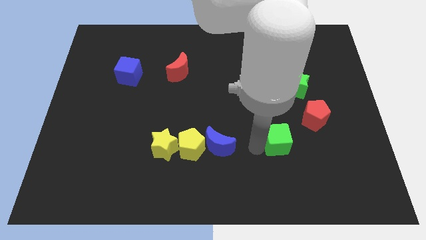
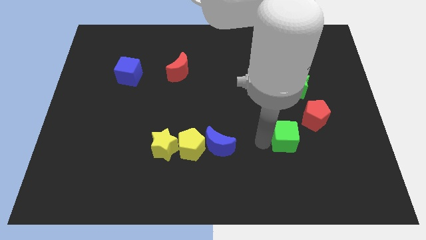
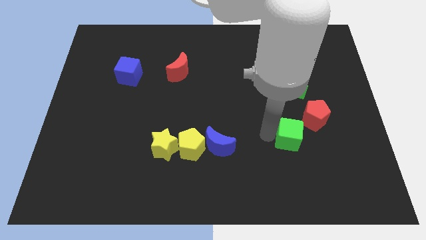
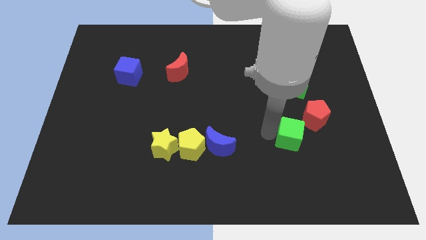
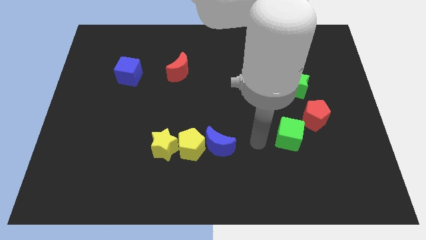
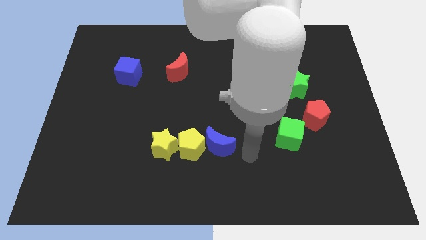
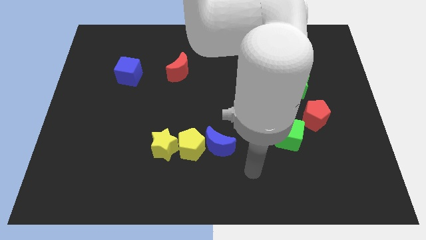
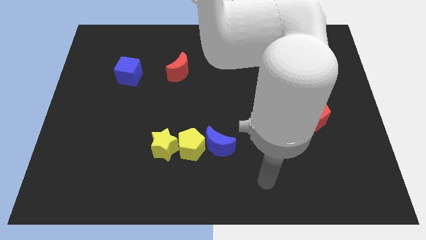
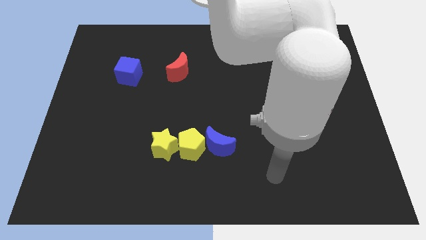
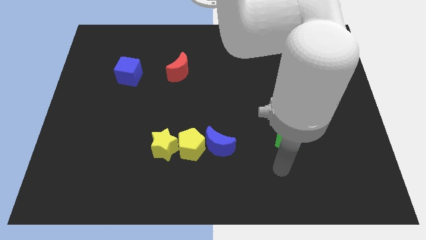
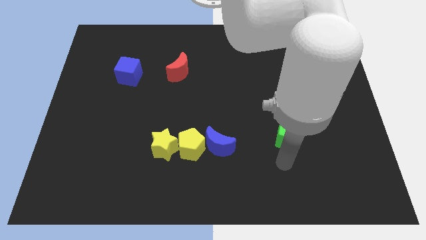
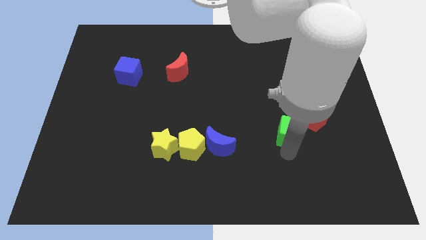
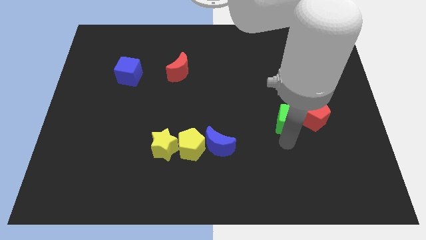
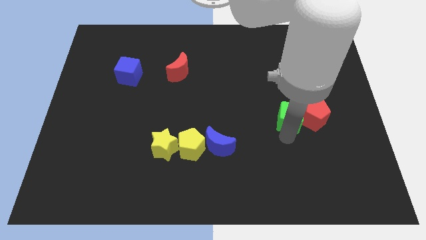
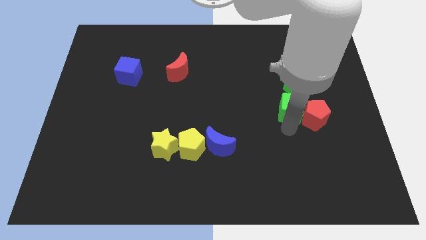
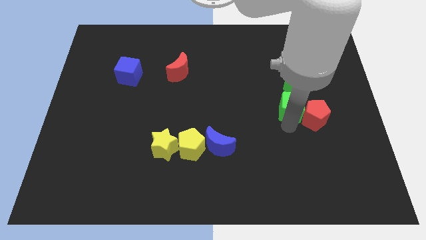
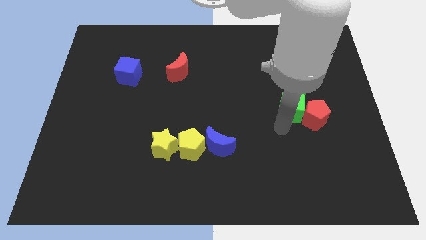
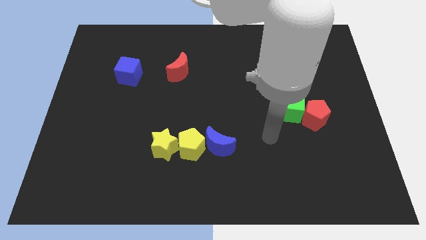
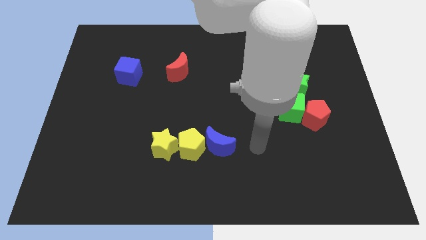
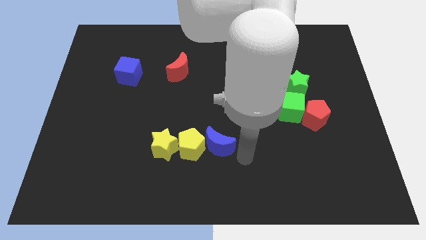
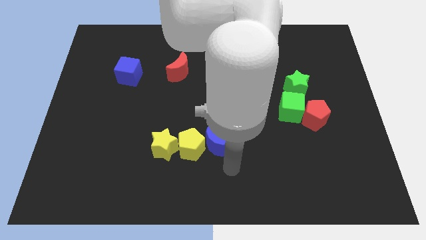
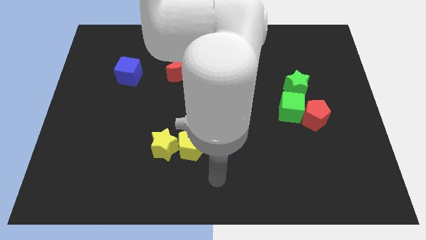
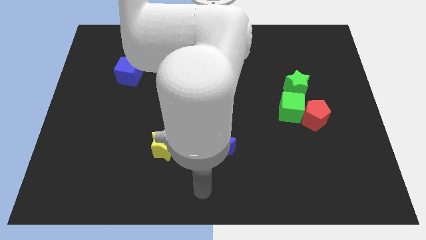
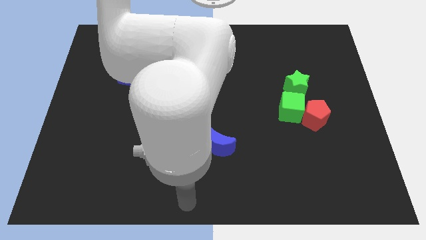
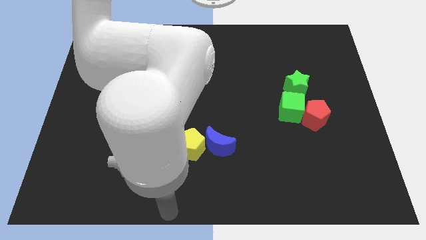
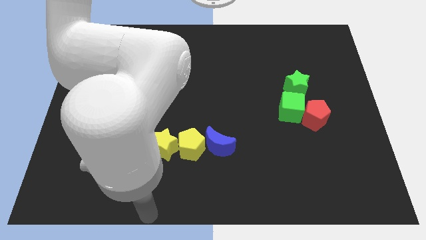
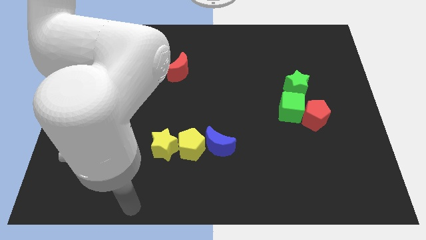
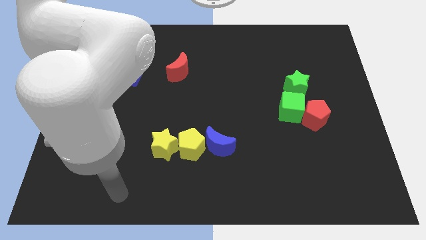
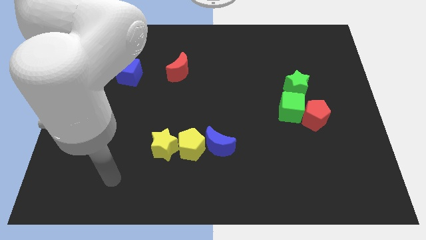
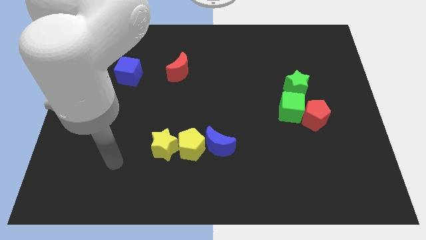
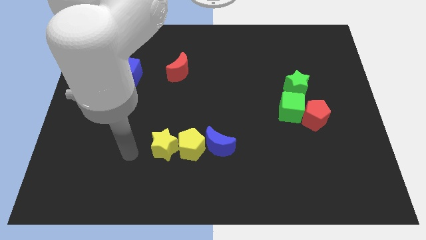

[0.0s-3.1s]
move the green cube verticallly below the green star

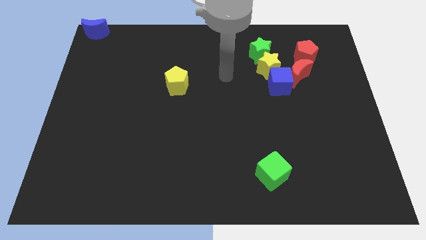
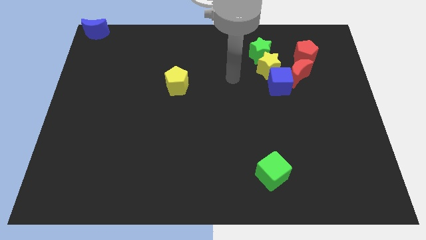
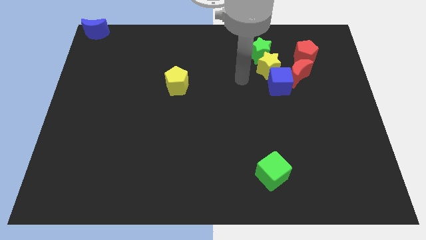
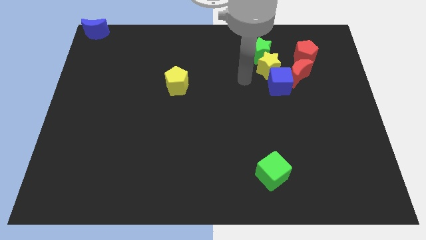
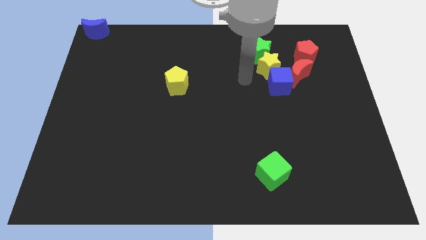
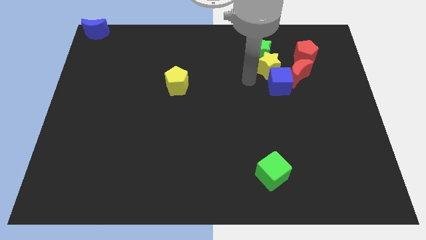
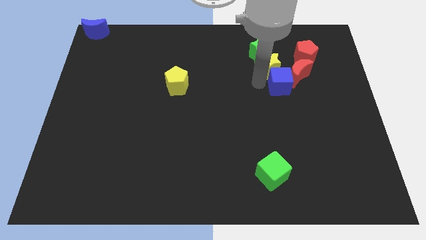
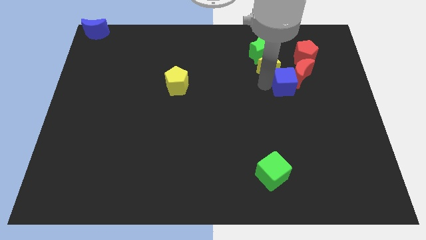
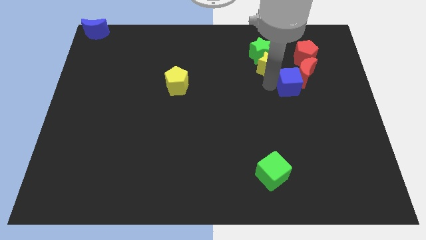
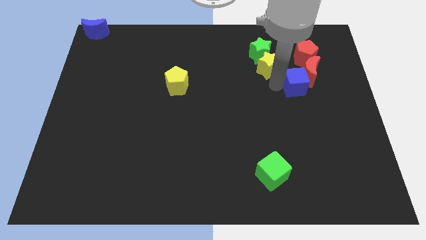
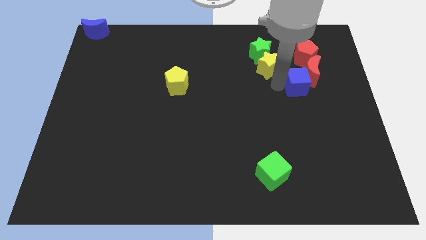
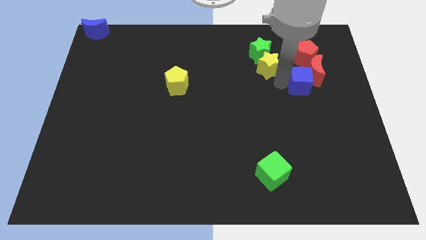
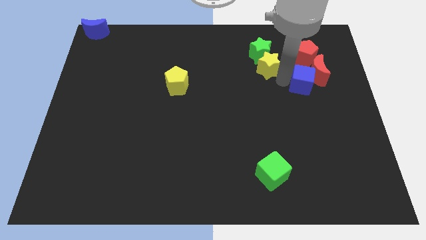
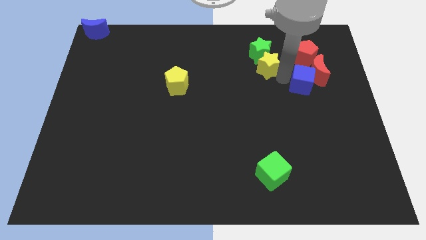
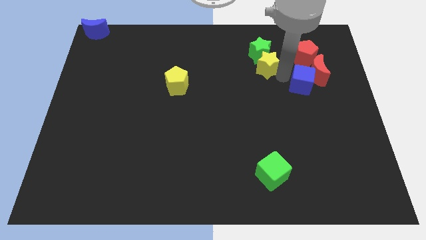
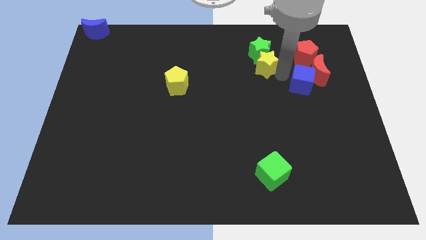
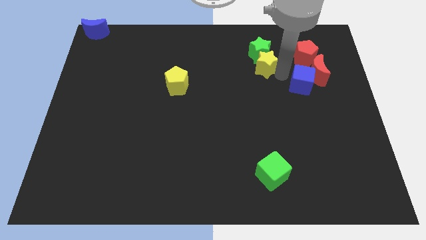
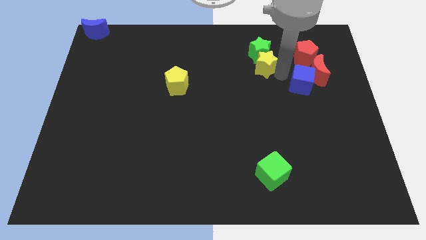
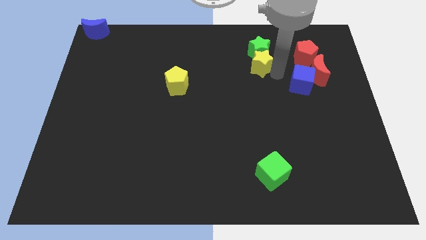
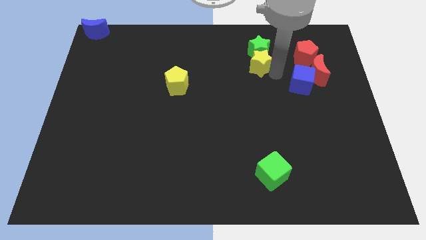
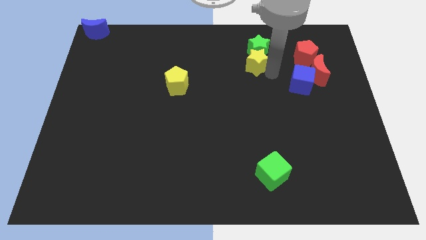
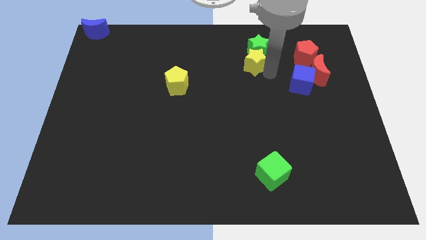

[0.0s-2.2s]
separate the yellow star and the blue cube

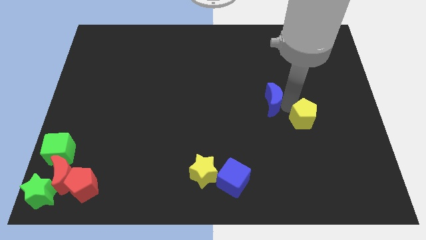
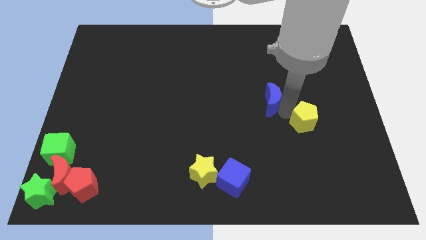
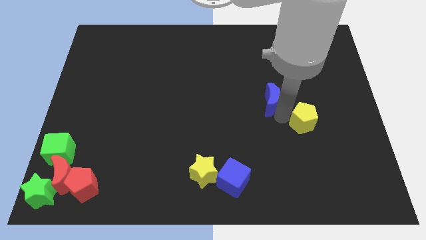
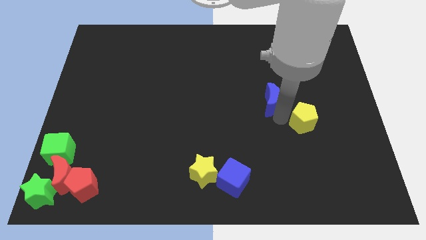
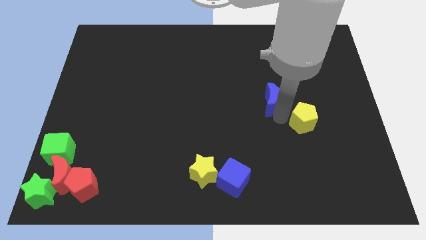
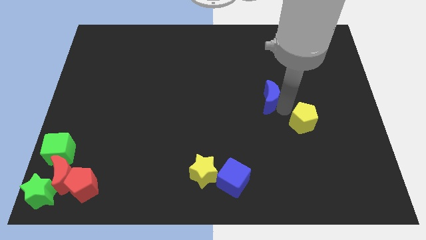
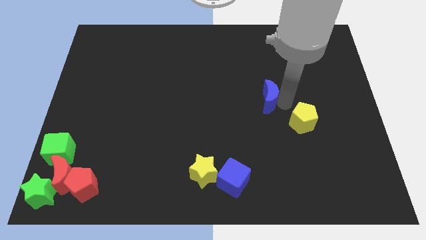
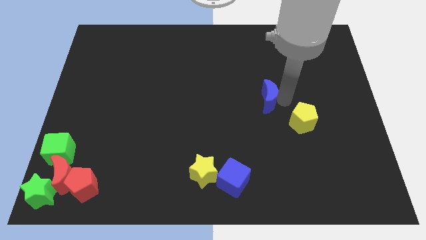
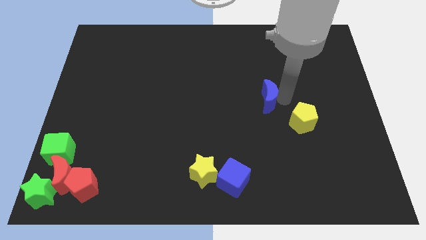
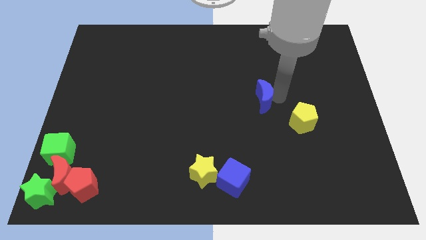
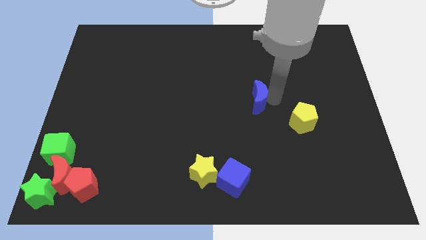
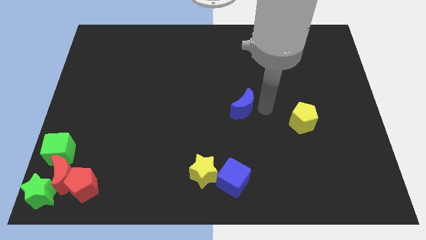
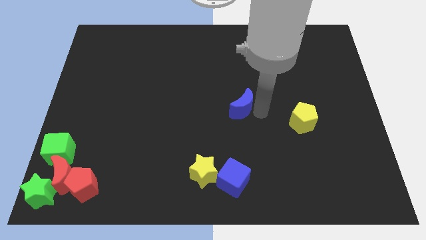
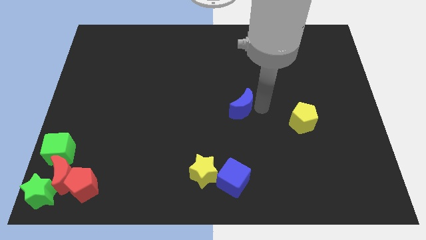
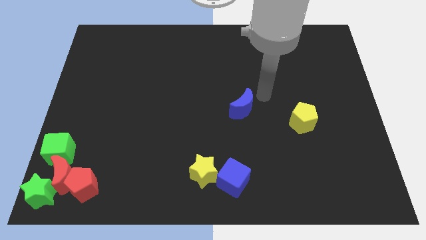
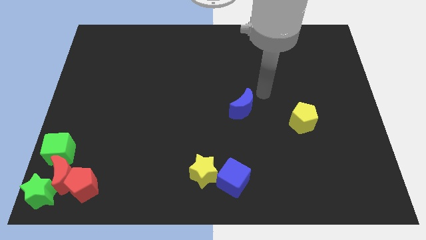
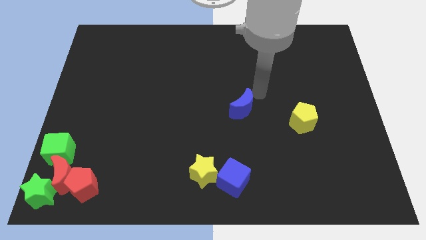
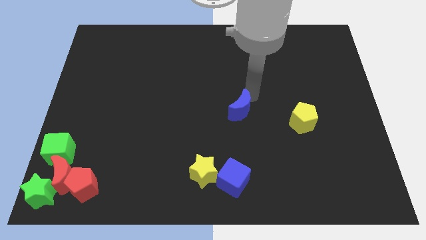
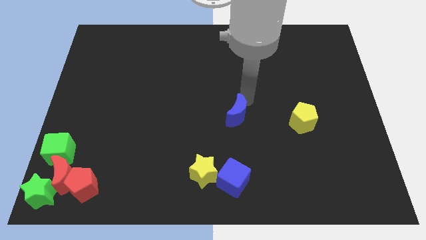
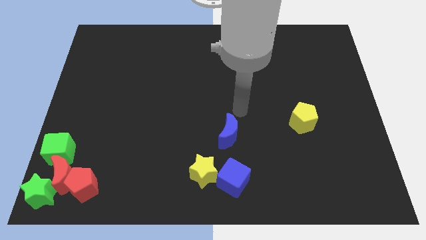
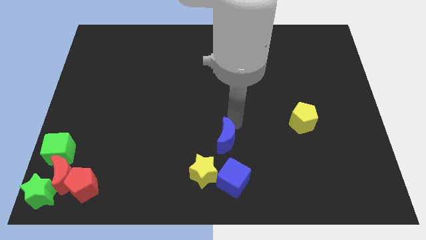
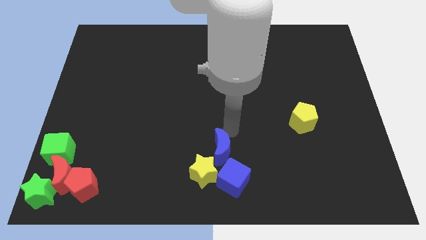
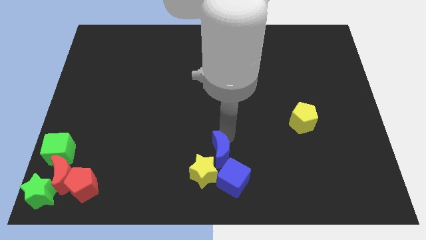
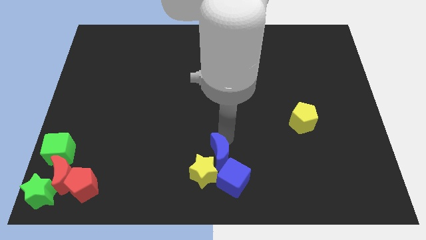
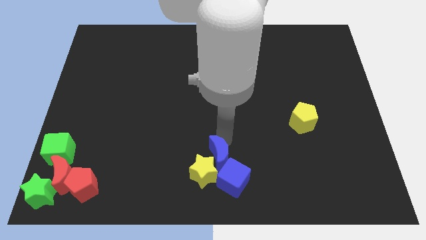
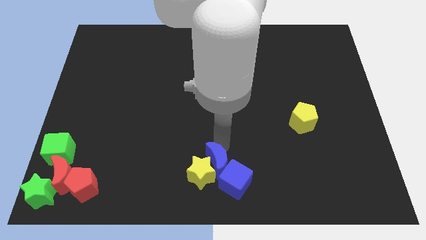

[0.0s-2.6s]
push the blue crescent into yellow star

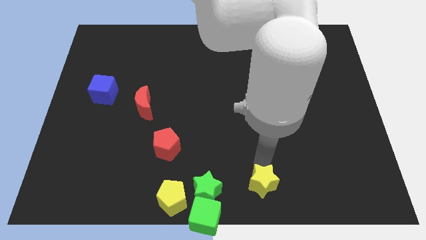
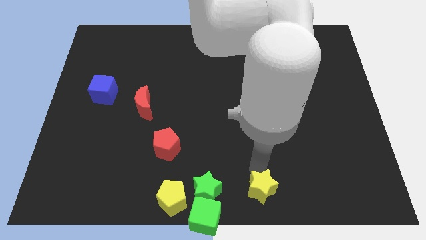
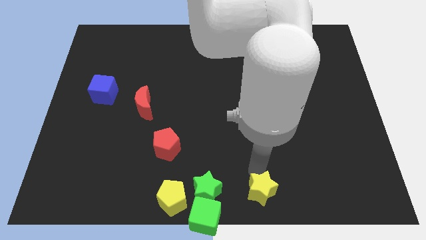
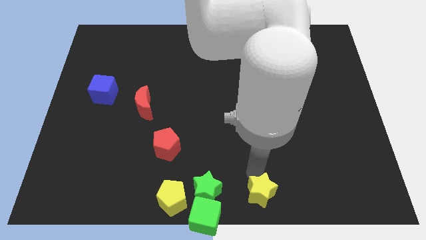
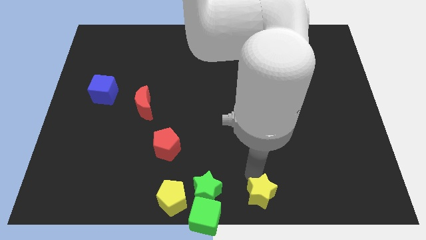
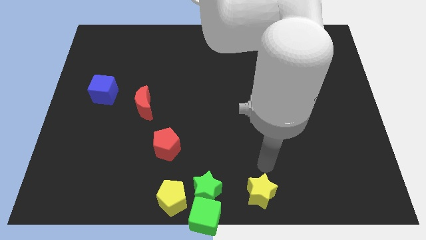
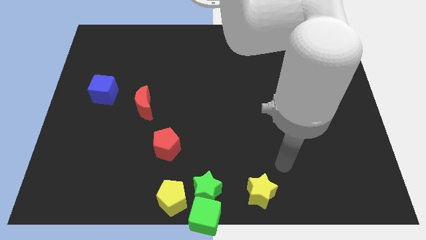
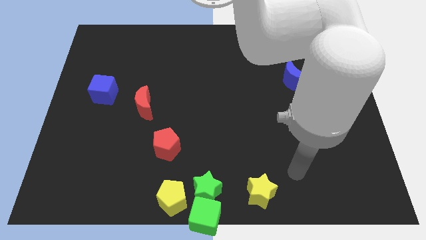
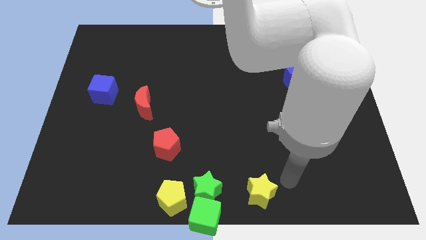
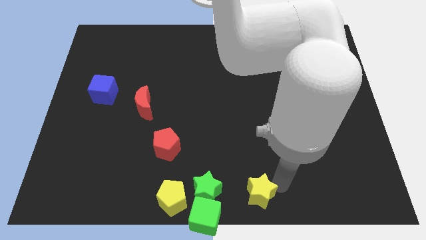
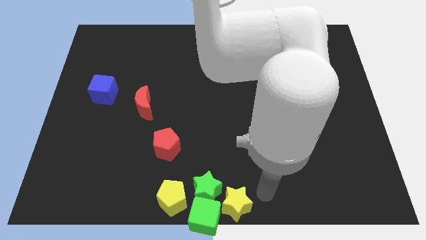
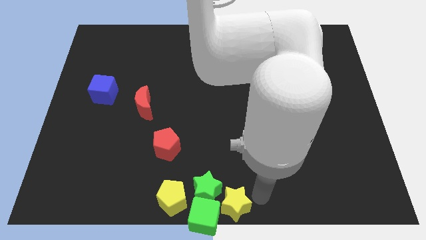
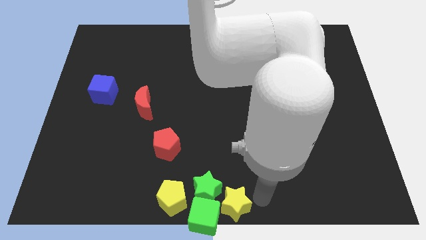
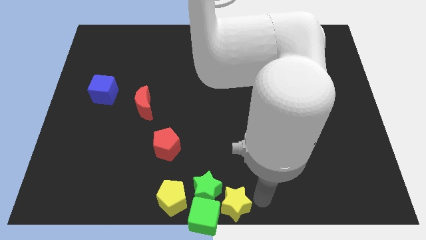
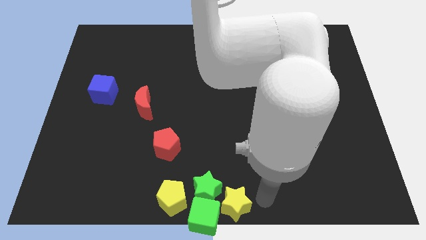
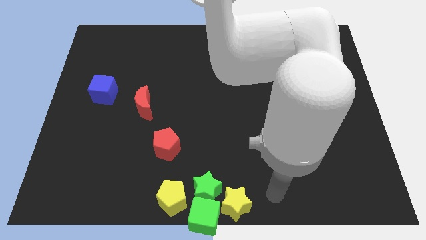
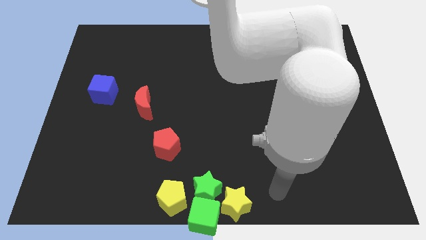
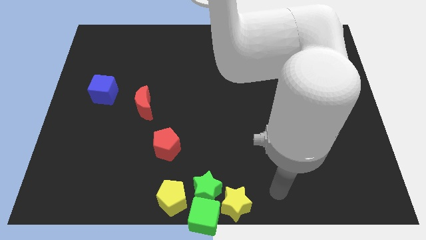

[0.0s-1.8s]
push the yellow star into the green blocks
